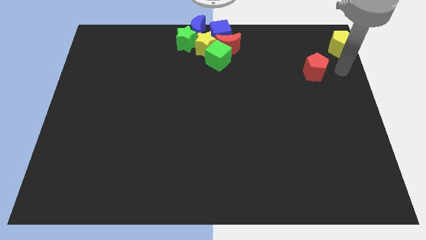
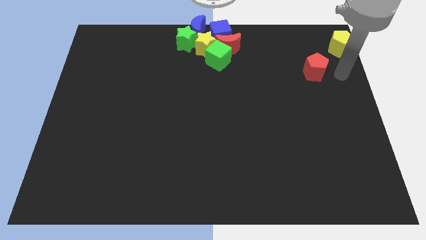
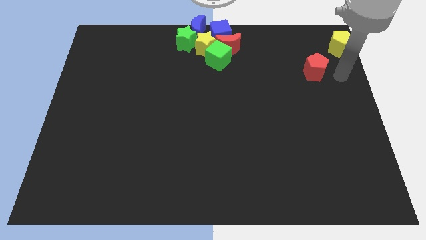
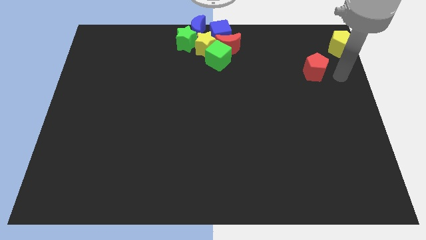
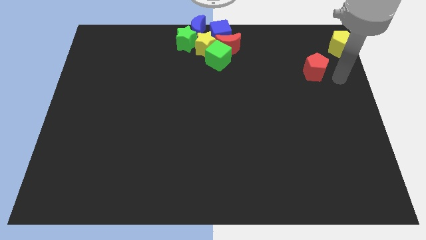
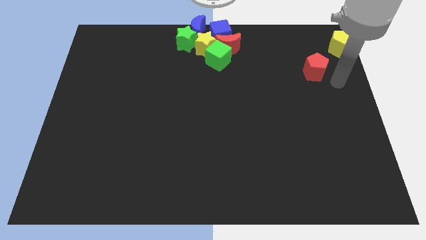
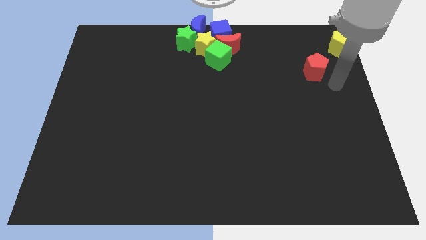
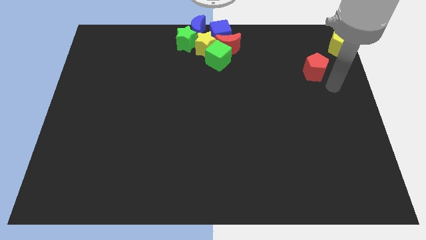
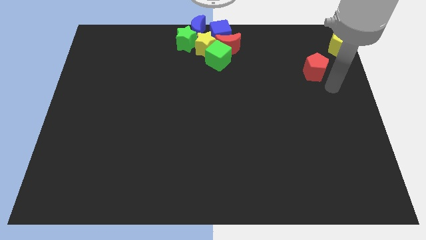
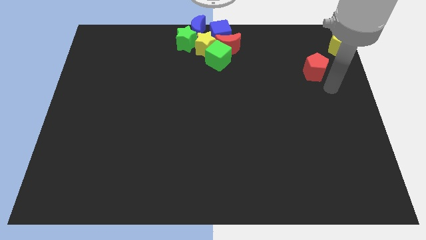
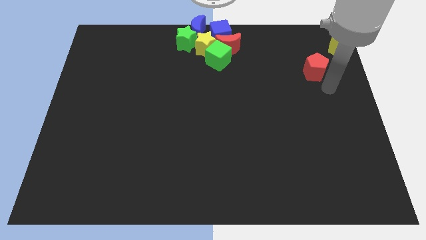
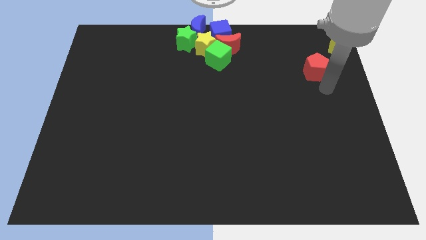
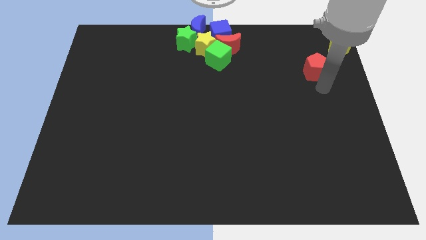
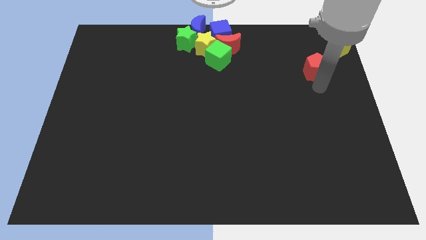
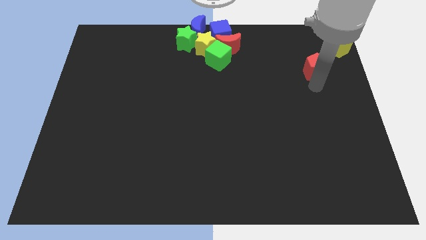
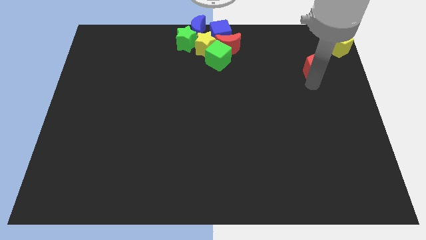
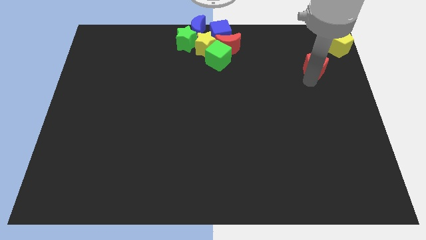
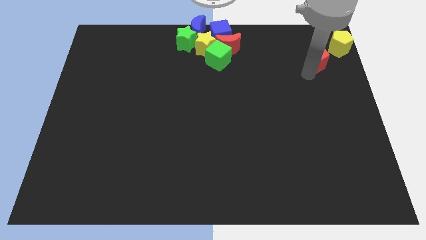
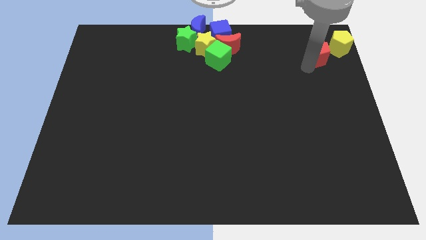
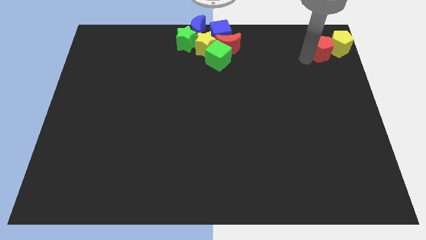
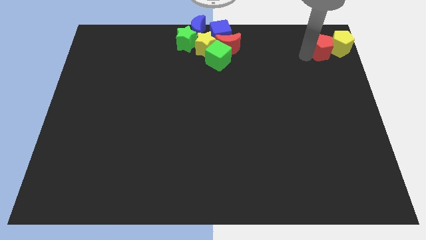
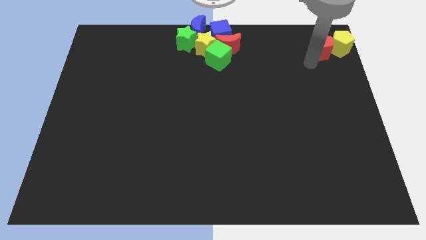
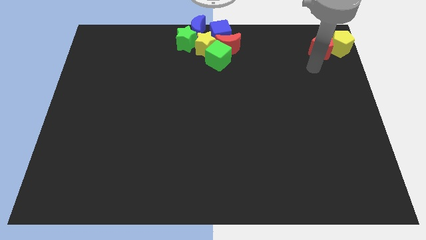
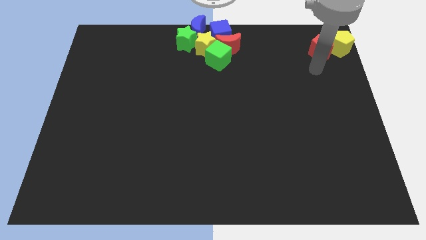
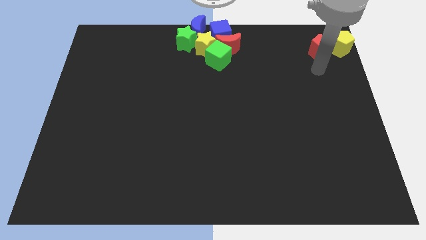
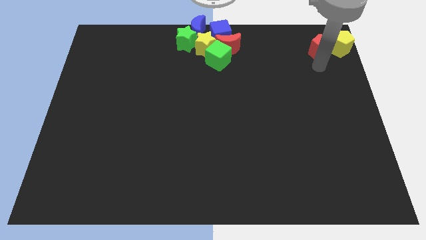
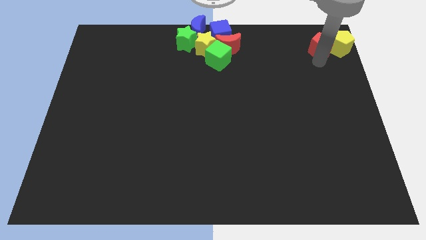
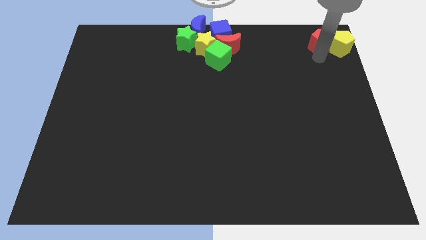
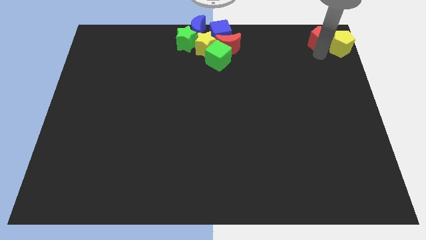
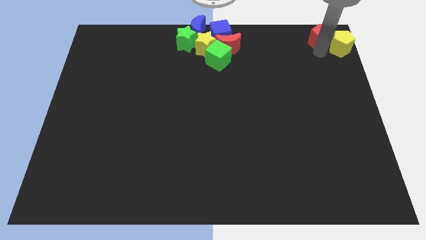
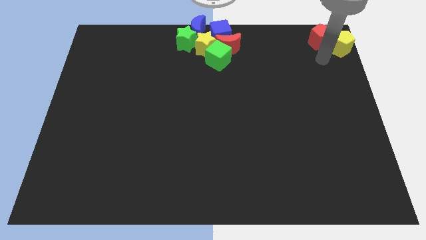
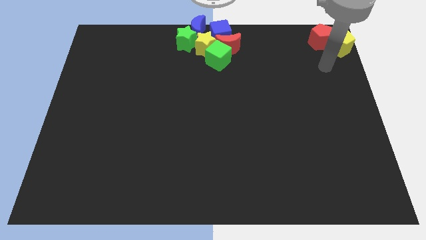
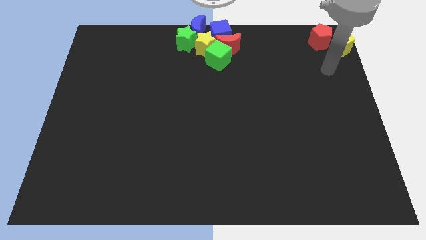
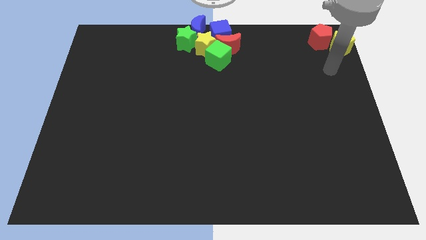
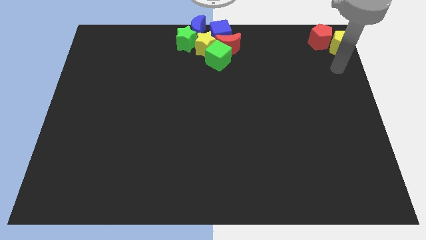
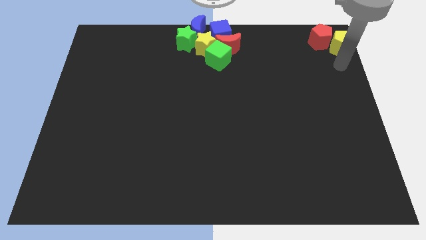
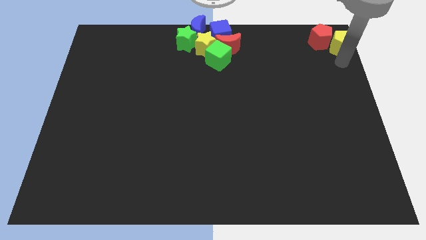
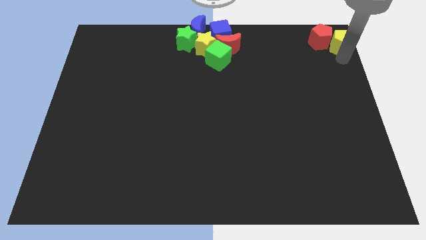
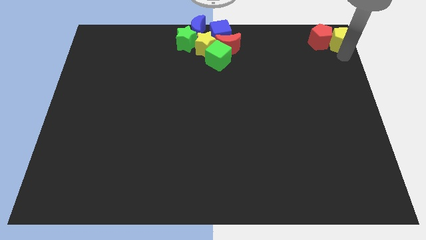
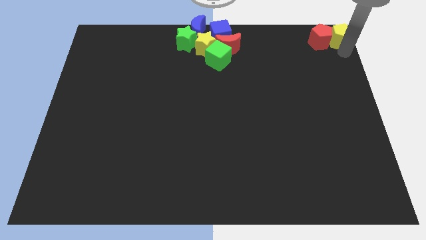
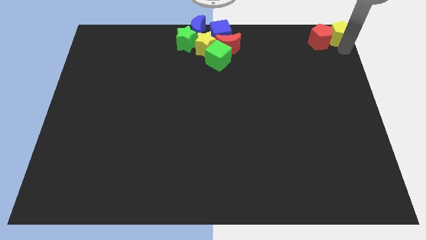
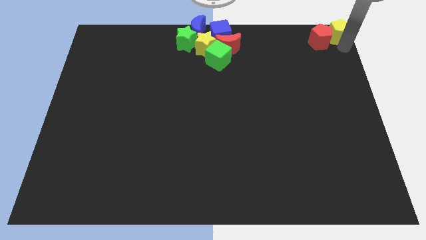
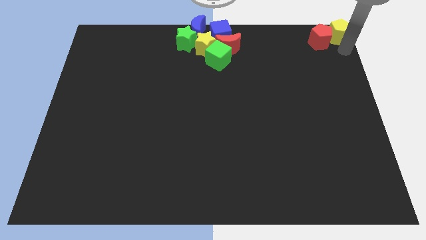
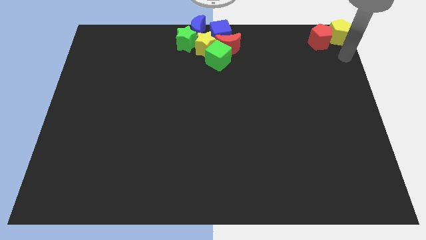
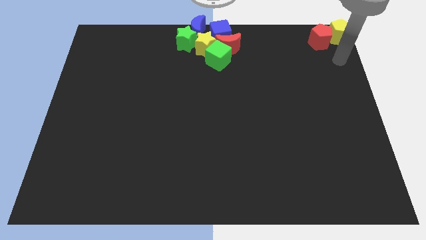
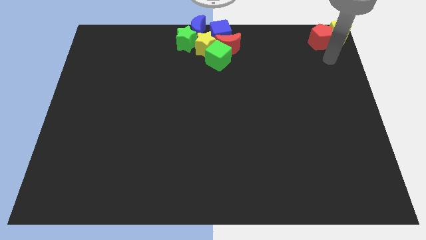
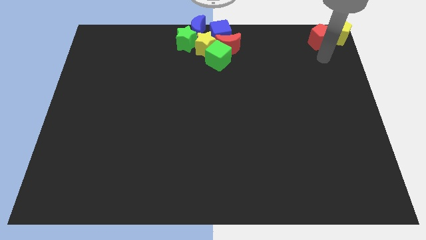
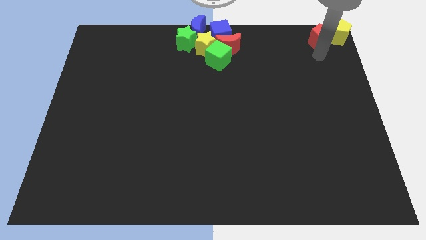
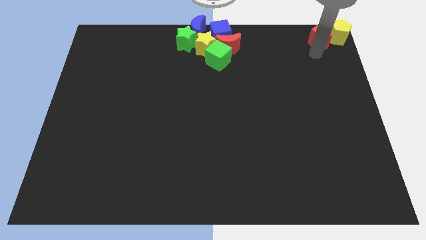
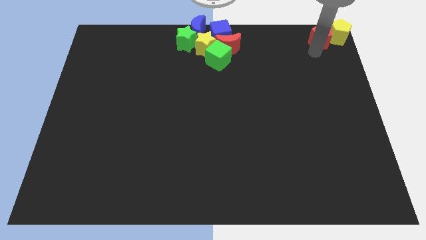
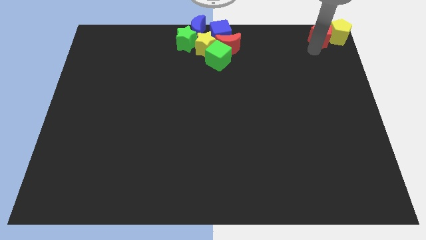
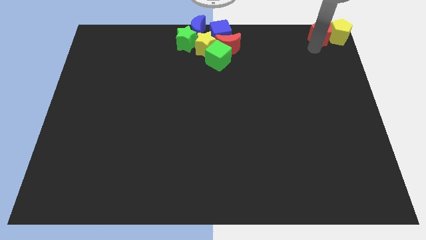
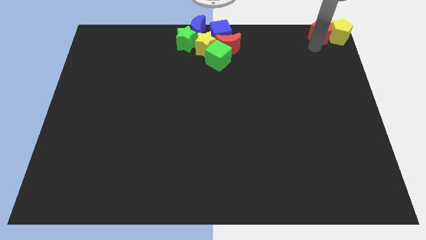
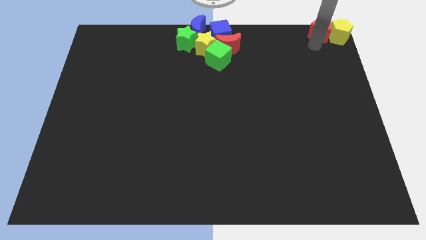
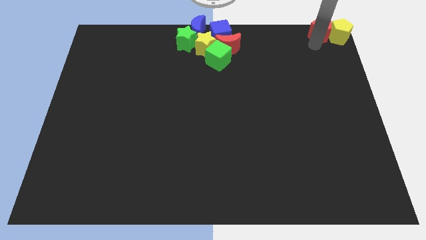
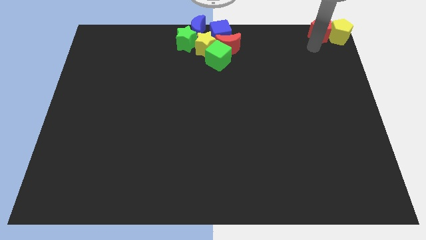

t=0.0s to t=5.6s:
place yellow pentagon and red pentagon to the right top of the board

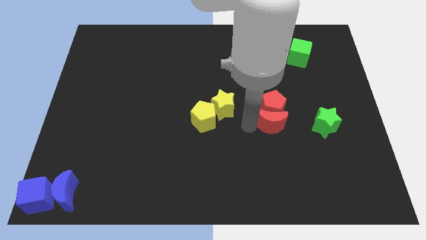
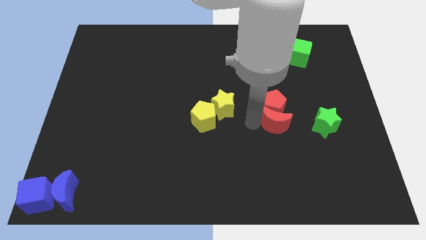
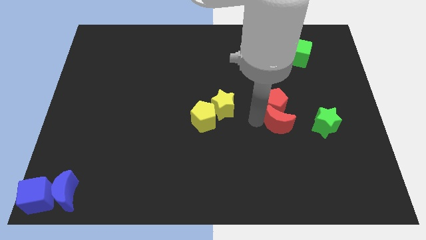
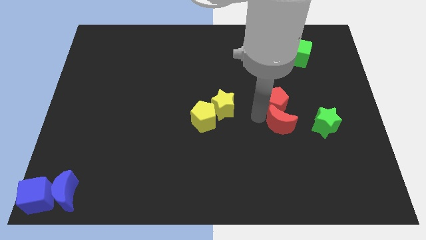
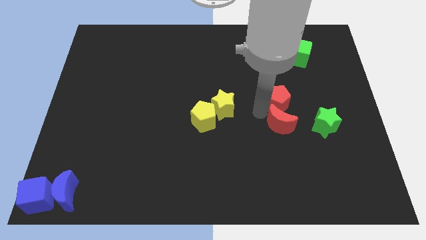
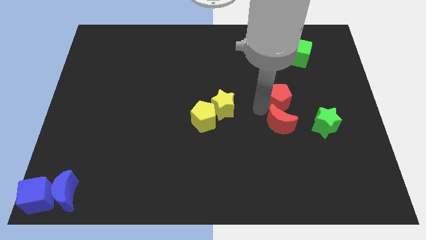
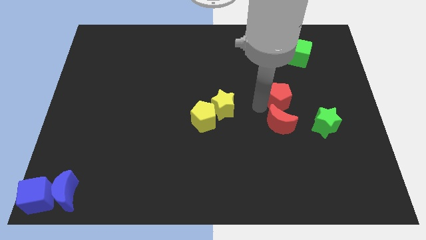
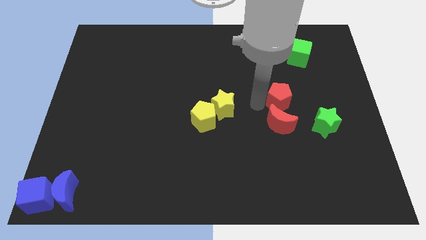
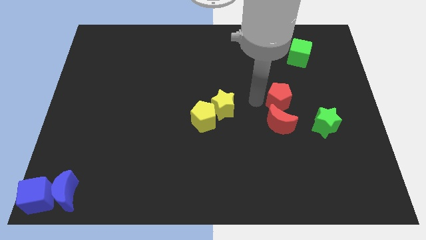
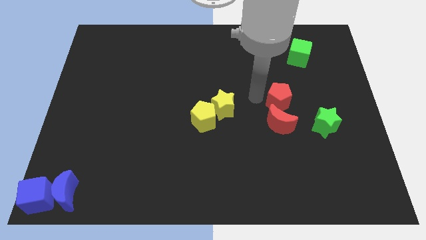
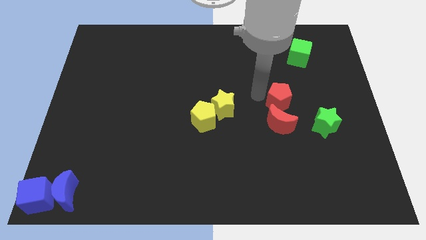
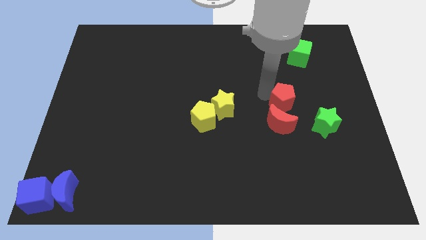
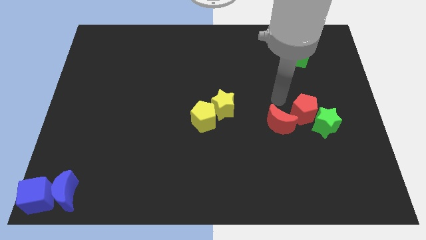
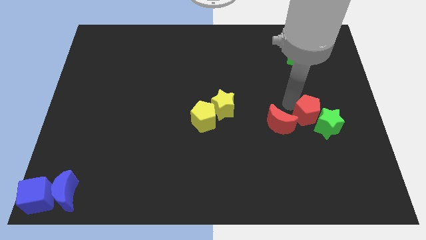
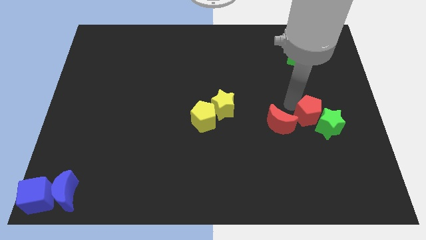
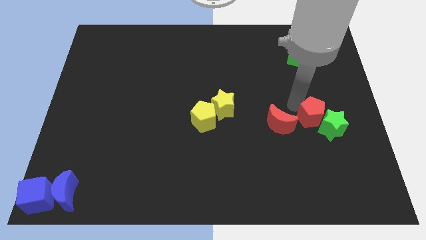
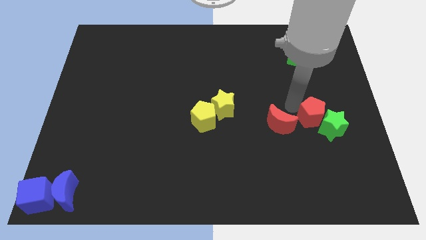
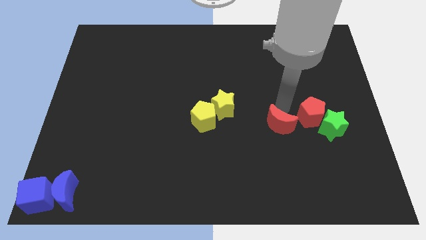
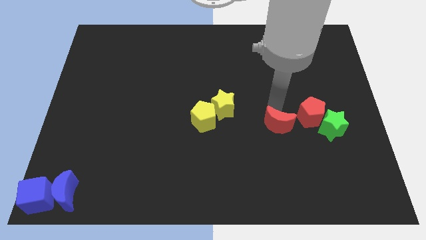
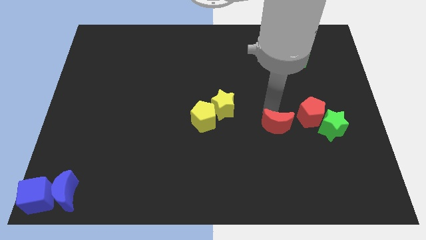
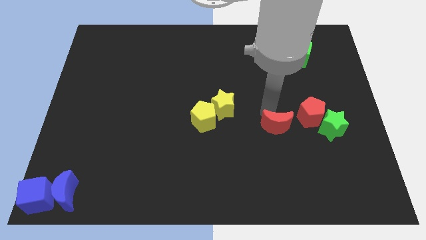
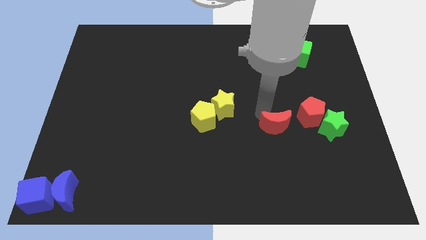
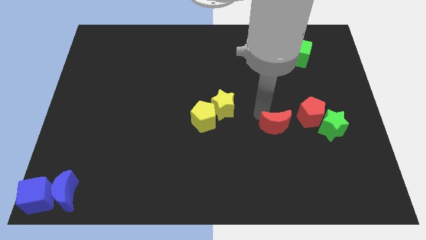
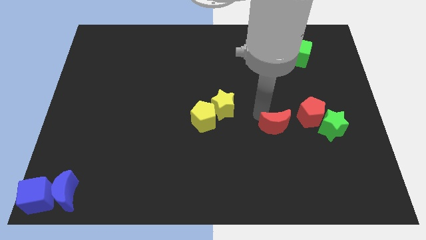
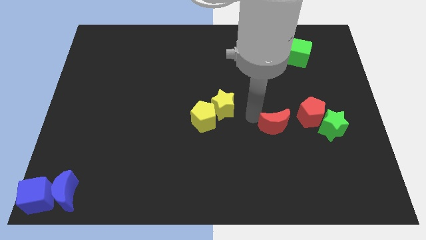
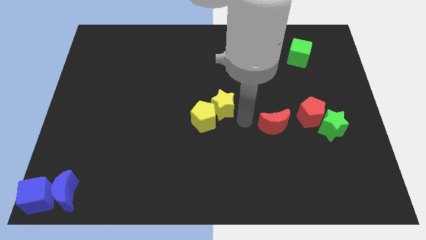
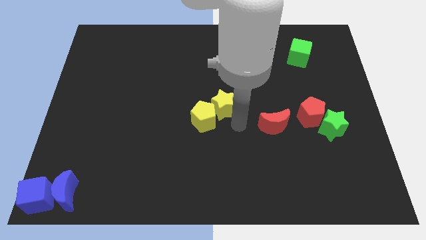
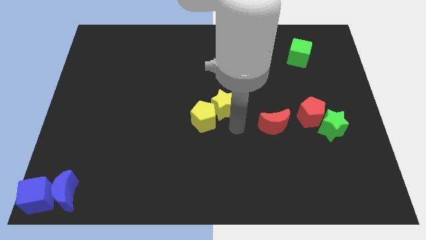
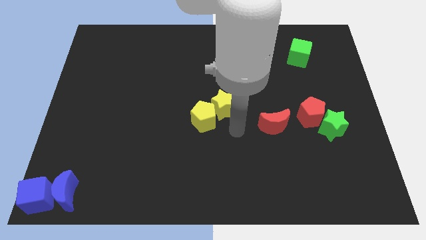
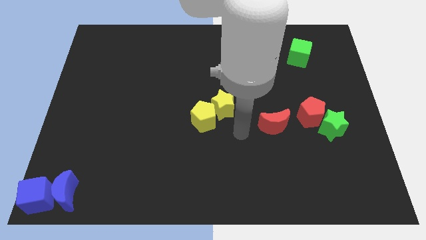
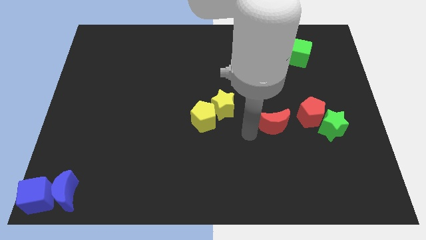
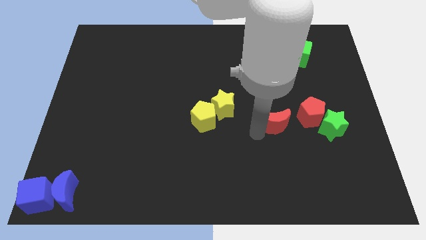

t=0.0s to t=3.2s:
move red pentagon into green star

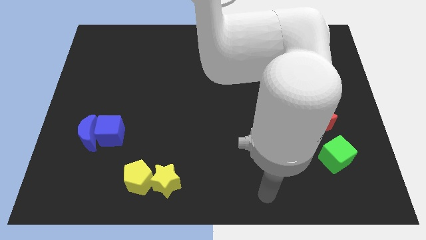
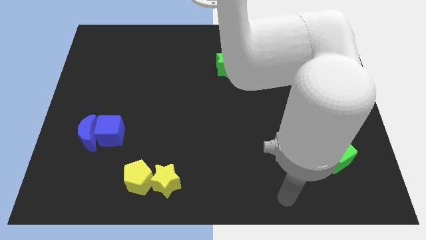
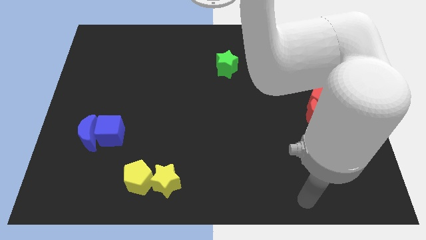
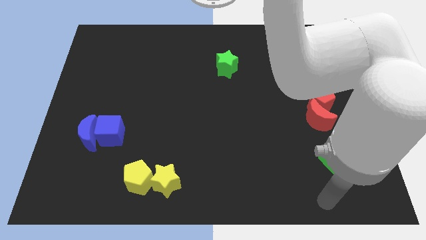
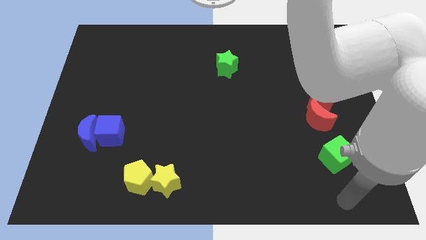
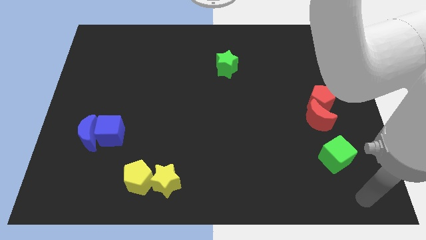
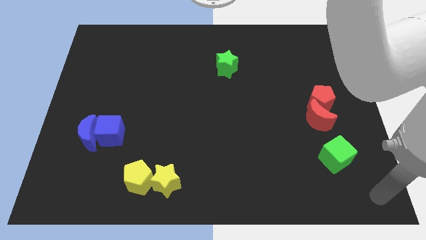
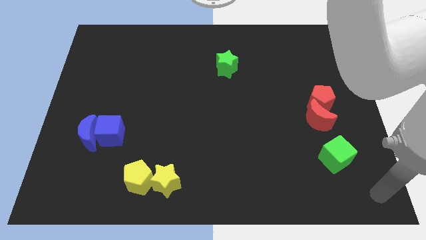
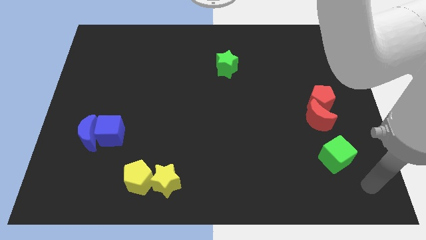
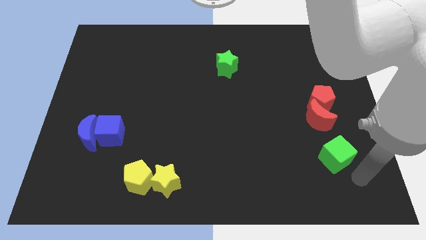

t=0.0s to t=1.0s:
move the arm towards the bottom right corner of the board
